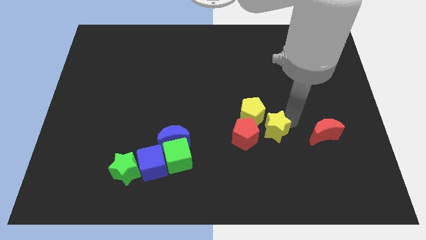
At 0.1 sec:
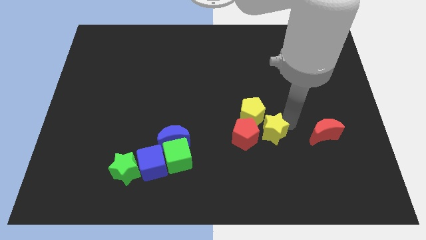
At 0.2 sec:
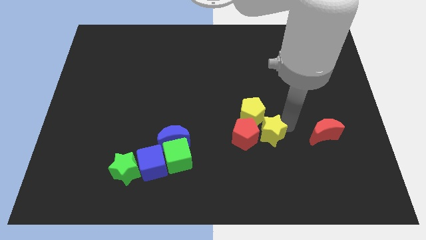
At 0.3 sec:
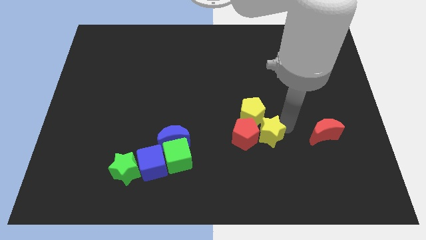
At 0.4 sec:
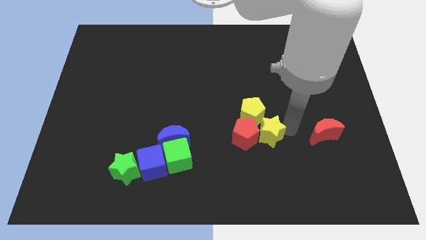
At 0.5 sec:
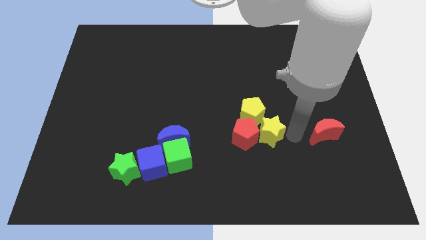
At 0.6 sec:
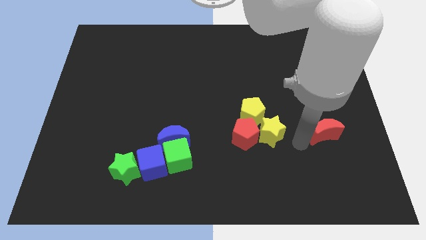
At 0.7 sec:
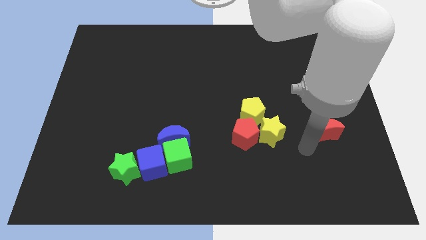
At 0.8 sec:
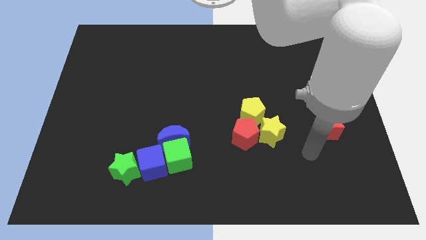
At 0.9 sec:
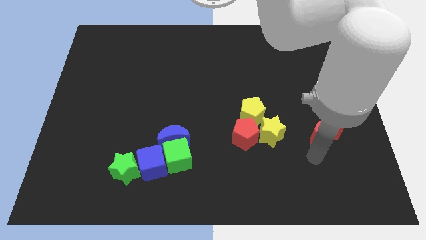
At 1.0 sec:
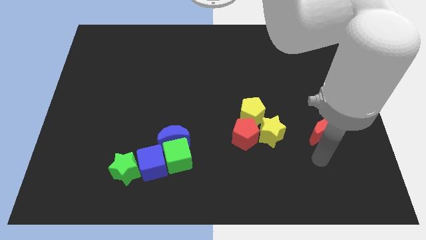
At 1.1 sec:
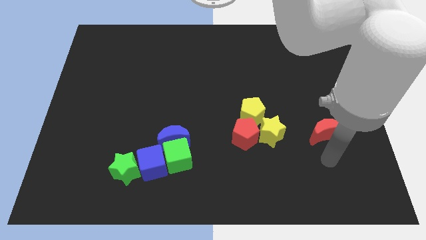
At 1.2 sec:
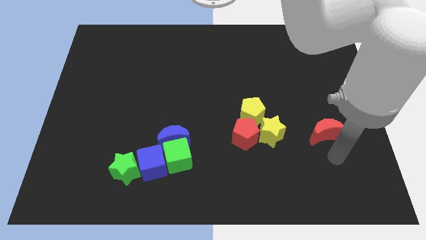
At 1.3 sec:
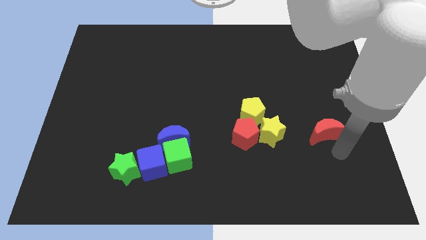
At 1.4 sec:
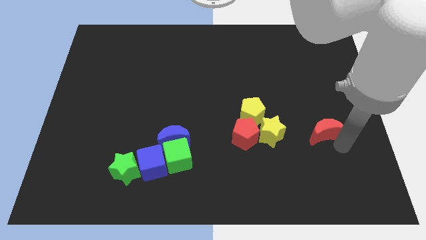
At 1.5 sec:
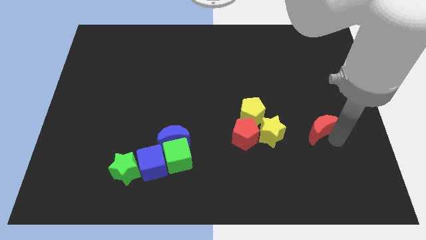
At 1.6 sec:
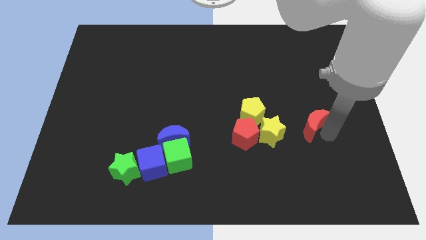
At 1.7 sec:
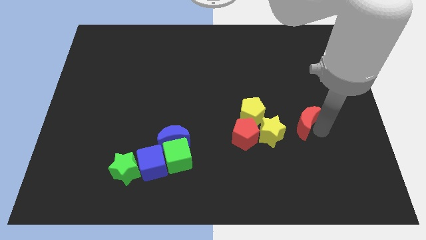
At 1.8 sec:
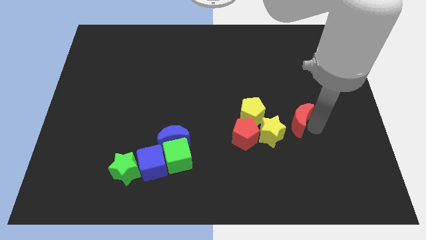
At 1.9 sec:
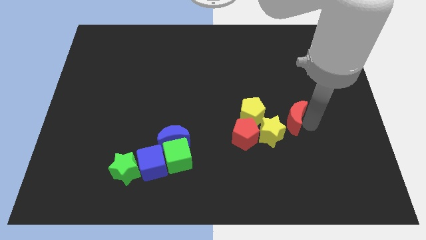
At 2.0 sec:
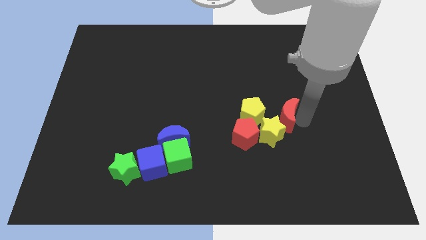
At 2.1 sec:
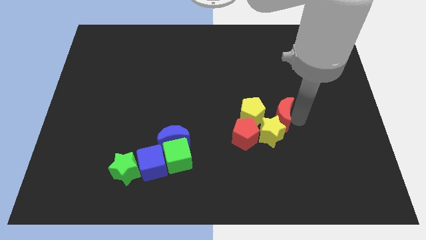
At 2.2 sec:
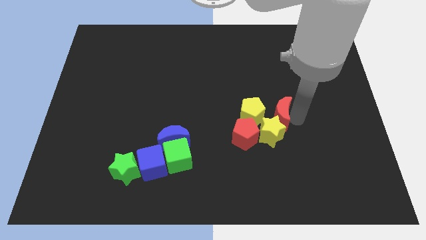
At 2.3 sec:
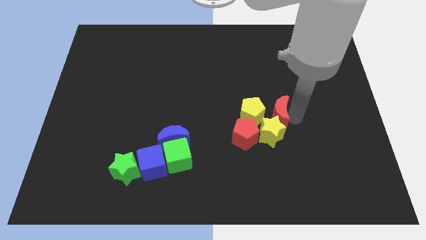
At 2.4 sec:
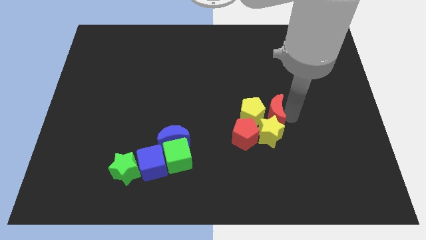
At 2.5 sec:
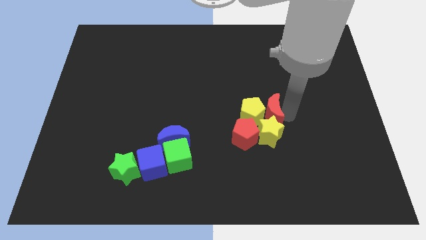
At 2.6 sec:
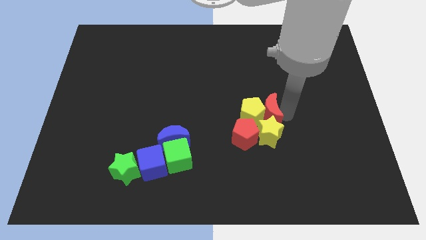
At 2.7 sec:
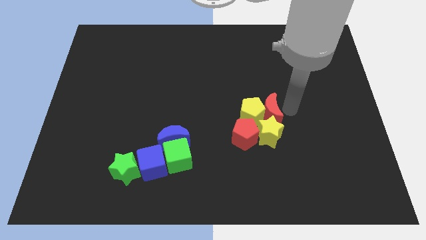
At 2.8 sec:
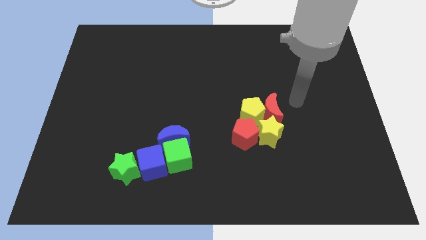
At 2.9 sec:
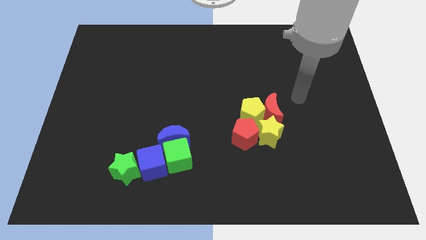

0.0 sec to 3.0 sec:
put the red moon at the top of yellow star

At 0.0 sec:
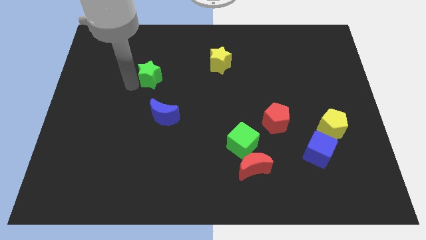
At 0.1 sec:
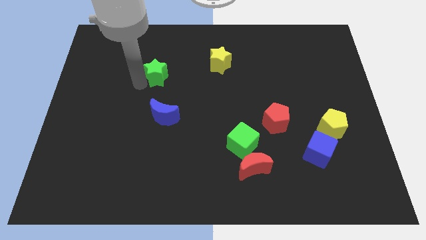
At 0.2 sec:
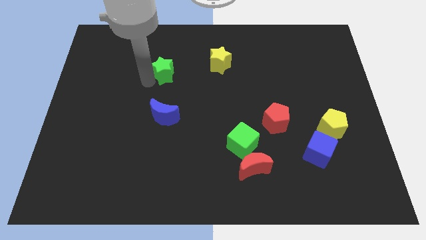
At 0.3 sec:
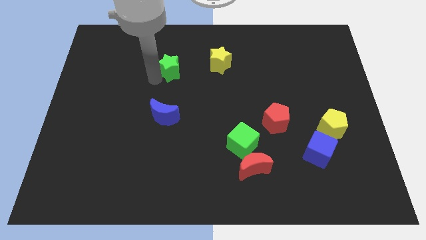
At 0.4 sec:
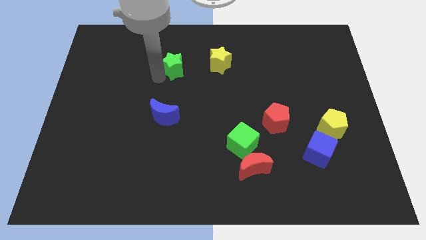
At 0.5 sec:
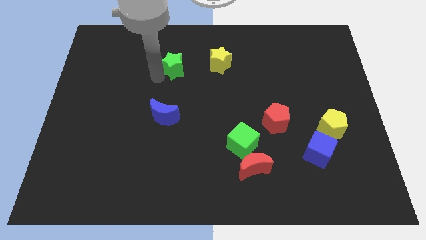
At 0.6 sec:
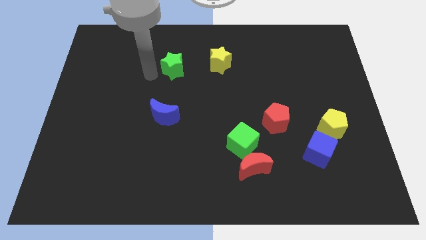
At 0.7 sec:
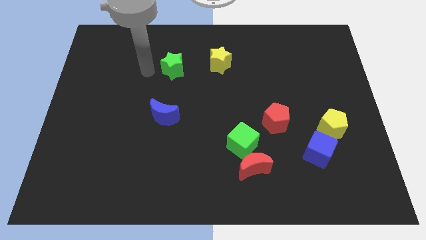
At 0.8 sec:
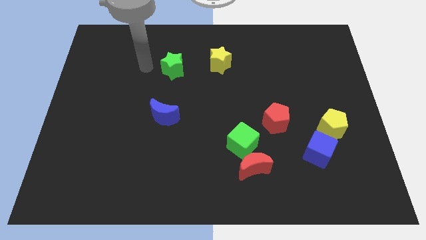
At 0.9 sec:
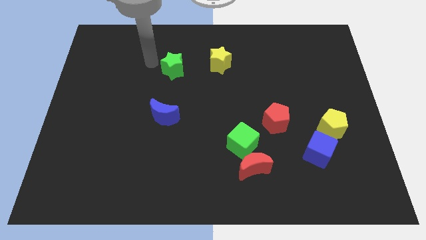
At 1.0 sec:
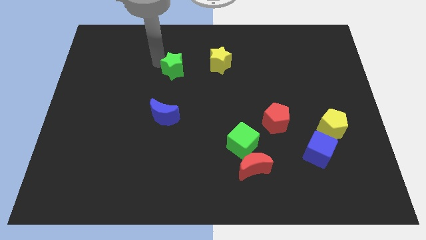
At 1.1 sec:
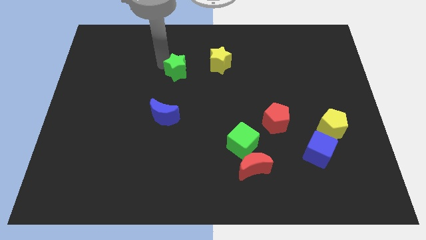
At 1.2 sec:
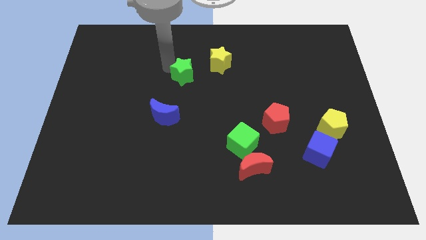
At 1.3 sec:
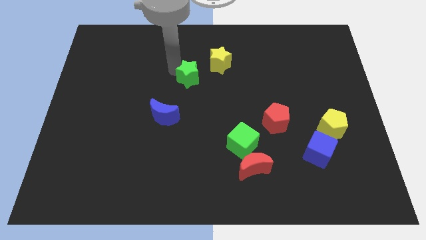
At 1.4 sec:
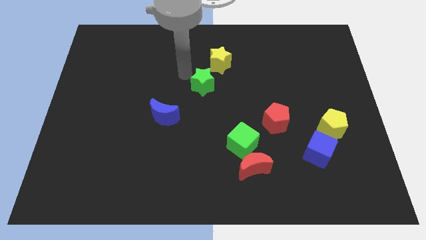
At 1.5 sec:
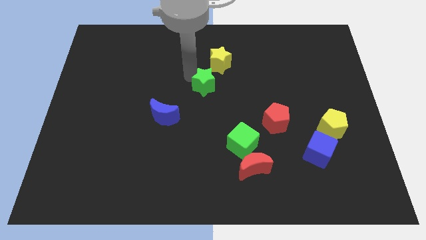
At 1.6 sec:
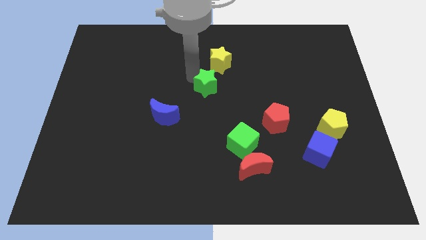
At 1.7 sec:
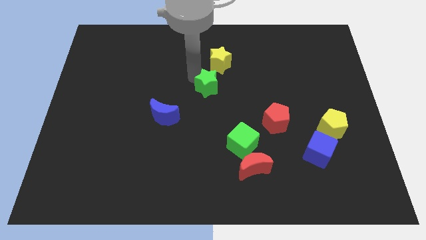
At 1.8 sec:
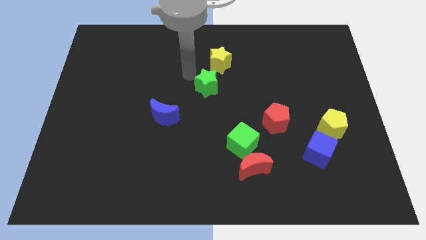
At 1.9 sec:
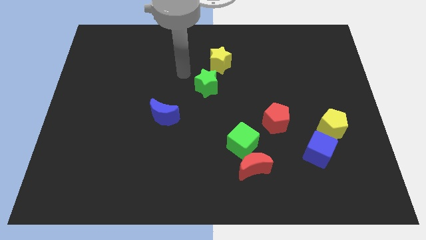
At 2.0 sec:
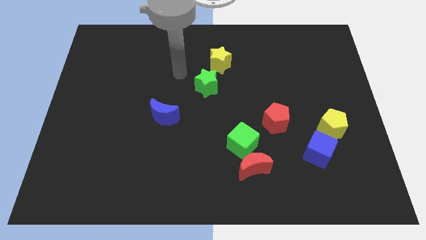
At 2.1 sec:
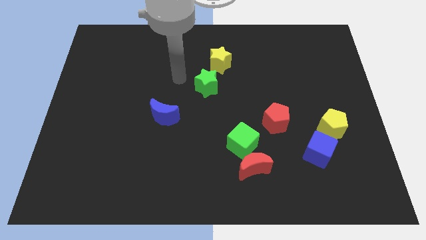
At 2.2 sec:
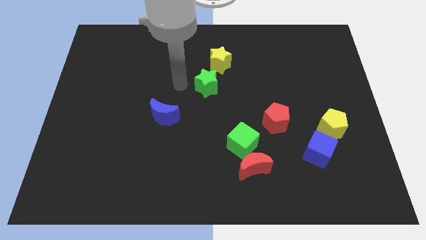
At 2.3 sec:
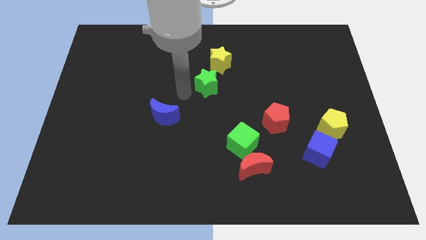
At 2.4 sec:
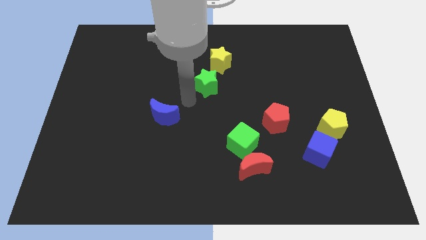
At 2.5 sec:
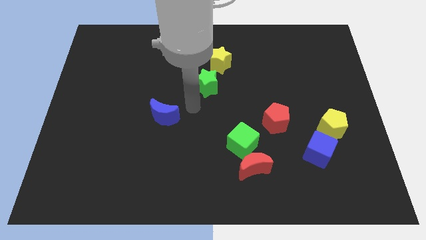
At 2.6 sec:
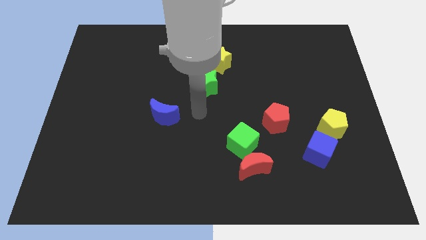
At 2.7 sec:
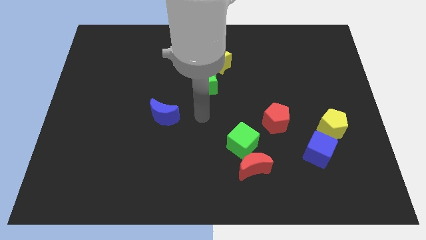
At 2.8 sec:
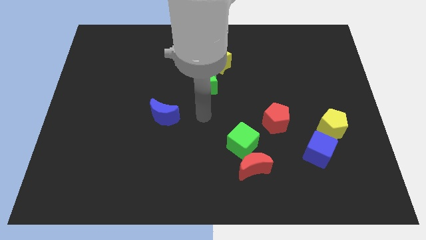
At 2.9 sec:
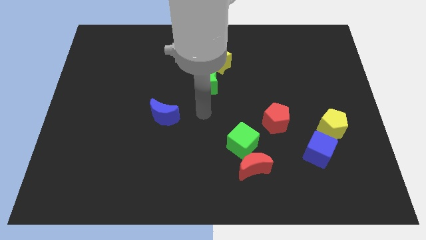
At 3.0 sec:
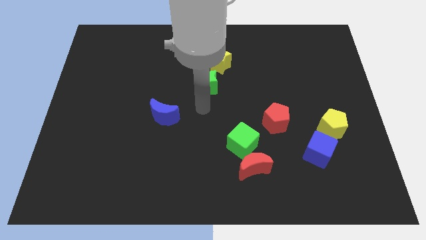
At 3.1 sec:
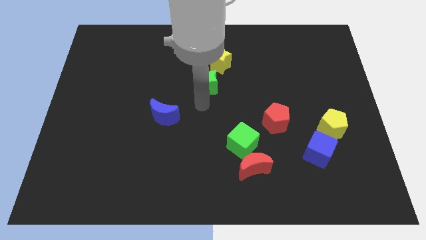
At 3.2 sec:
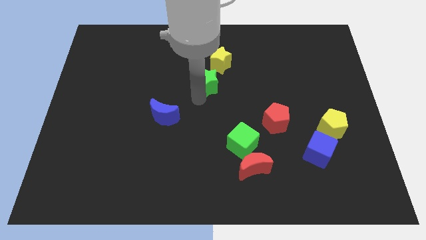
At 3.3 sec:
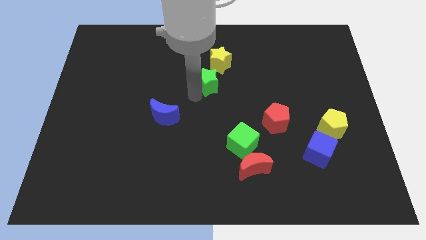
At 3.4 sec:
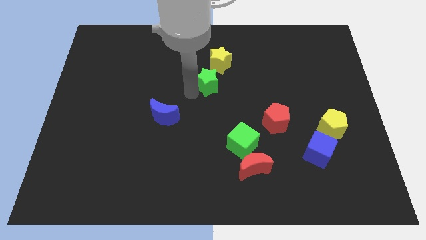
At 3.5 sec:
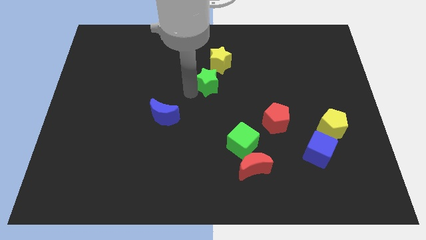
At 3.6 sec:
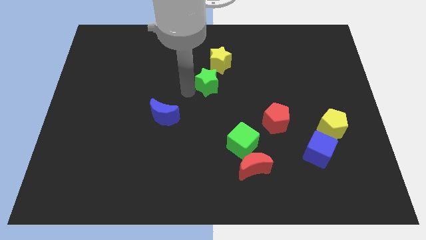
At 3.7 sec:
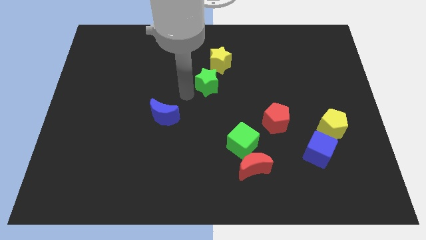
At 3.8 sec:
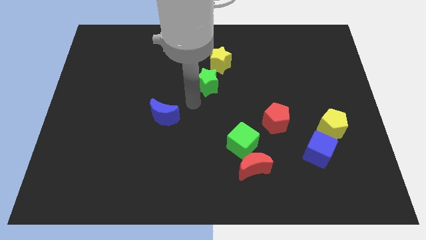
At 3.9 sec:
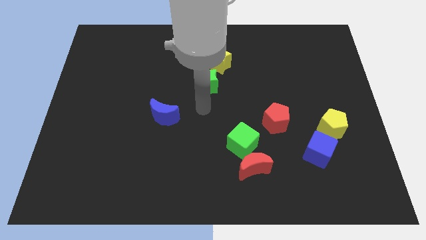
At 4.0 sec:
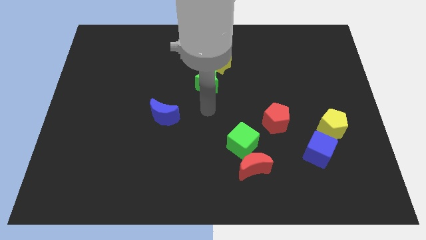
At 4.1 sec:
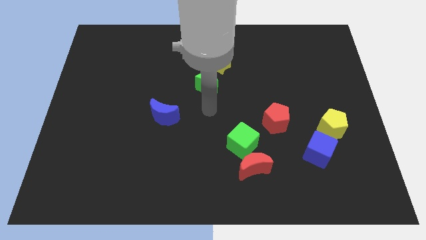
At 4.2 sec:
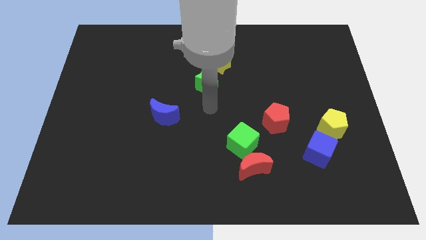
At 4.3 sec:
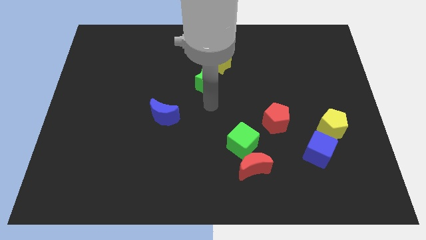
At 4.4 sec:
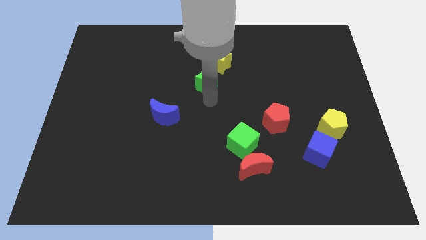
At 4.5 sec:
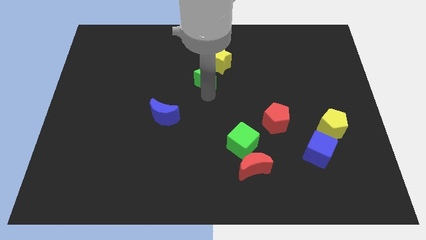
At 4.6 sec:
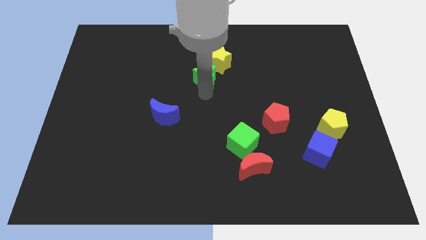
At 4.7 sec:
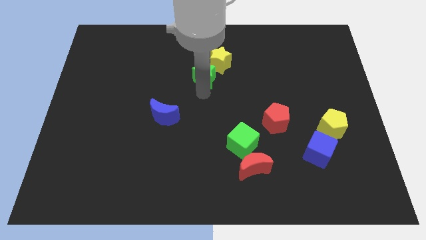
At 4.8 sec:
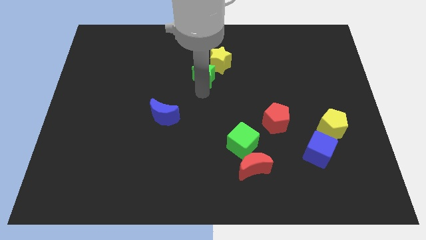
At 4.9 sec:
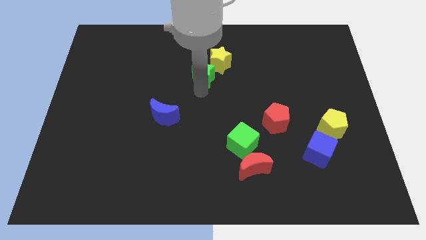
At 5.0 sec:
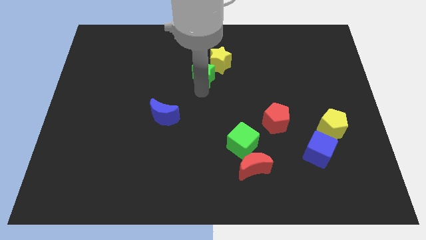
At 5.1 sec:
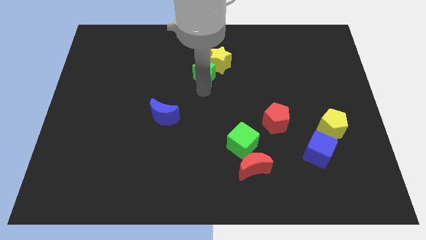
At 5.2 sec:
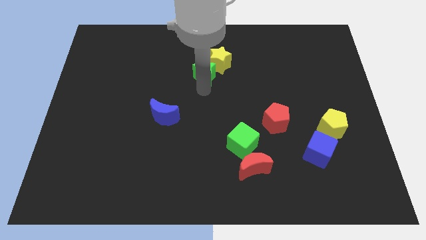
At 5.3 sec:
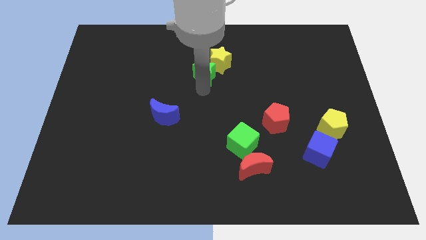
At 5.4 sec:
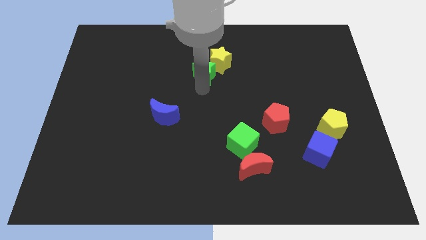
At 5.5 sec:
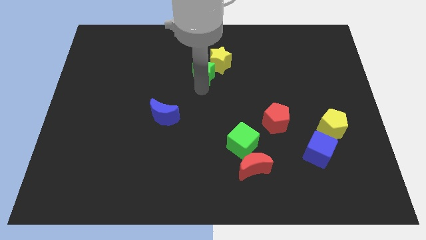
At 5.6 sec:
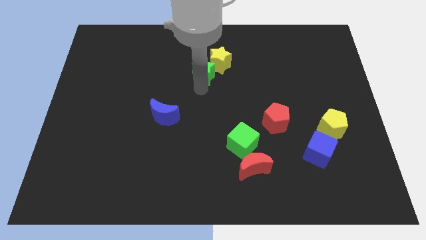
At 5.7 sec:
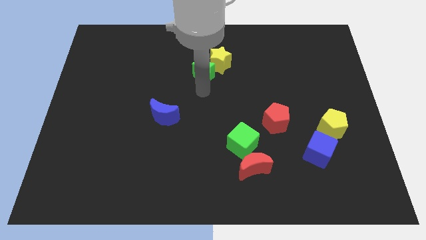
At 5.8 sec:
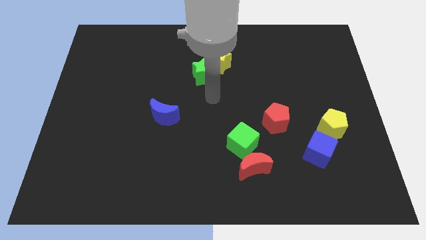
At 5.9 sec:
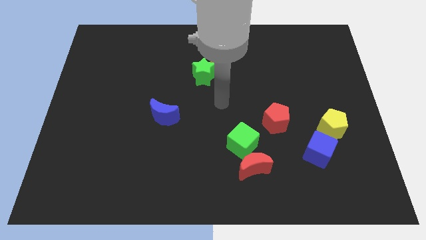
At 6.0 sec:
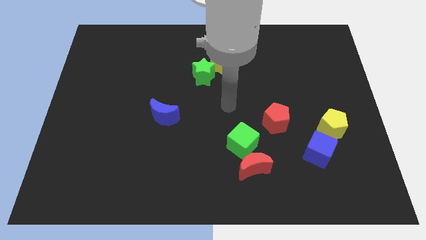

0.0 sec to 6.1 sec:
push the green star to the bottom left of the yellow star
